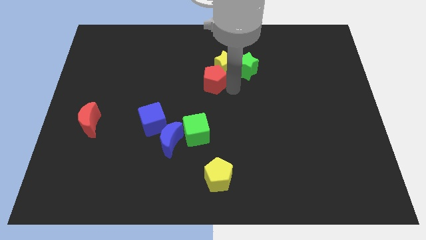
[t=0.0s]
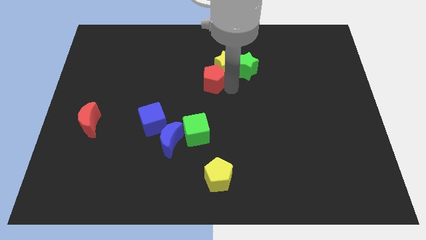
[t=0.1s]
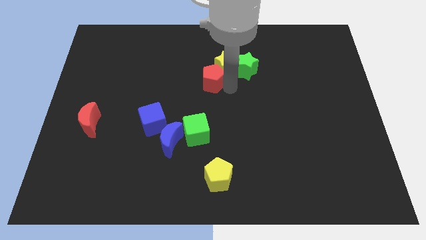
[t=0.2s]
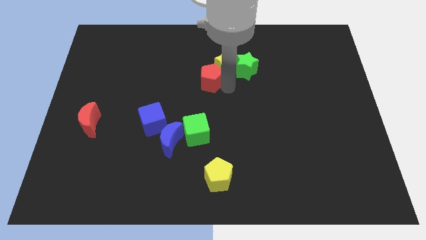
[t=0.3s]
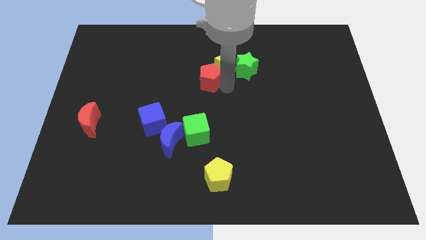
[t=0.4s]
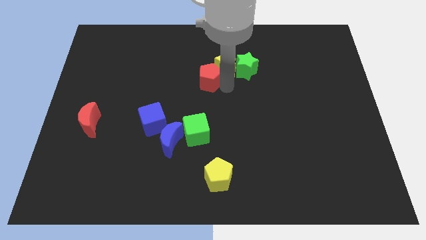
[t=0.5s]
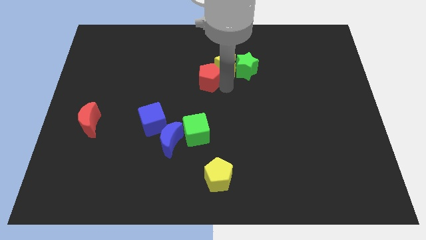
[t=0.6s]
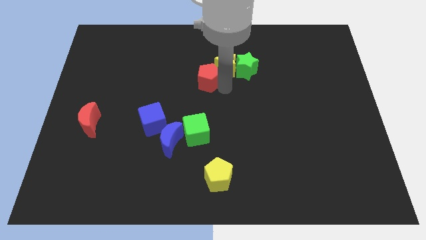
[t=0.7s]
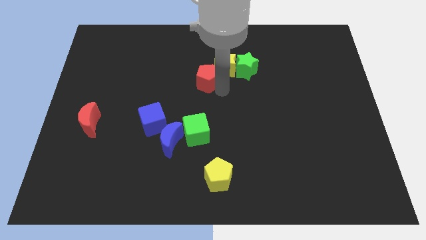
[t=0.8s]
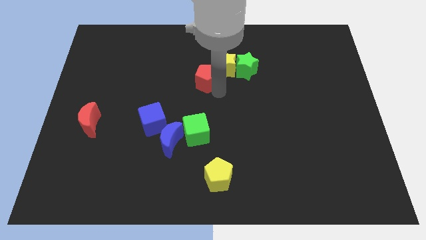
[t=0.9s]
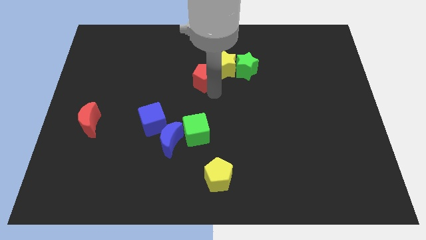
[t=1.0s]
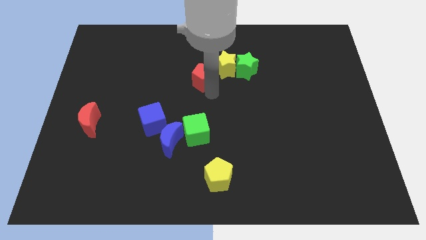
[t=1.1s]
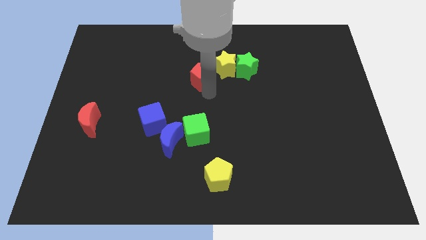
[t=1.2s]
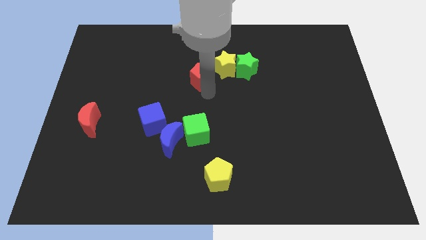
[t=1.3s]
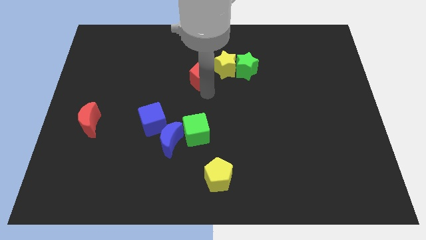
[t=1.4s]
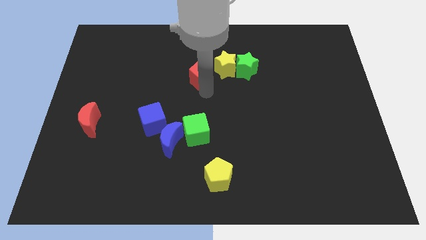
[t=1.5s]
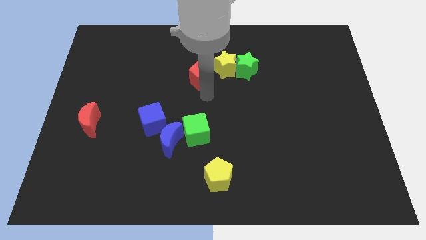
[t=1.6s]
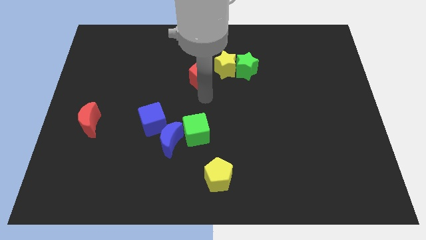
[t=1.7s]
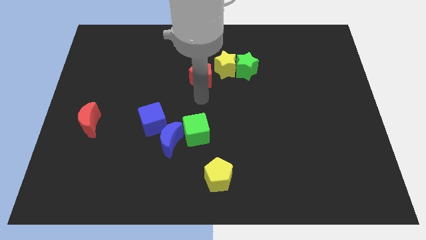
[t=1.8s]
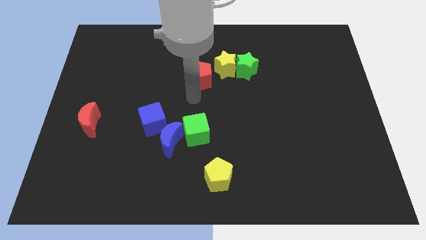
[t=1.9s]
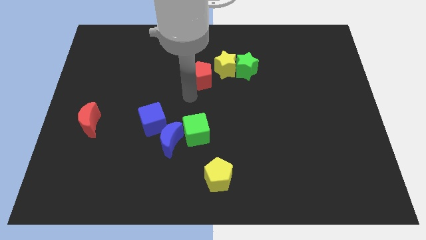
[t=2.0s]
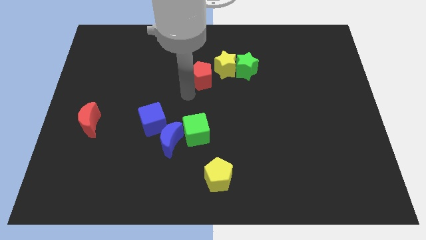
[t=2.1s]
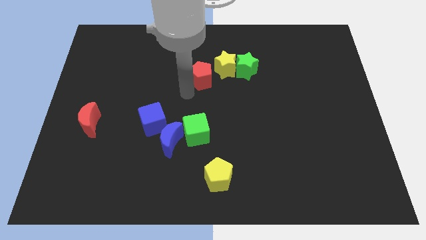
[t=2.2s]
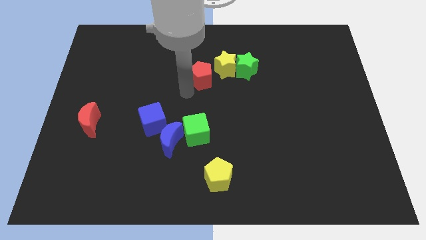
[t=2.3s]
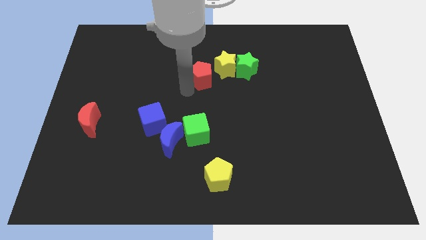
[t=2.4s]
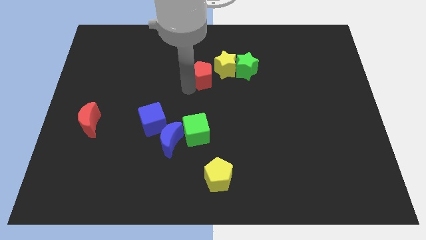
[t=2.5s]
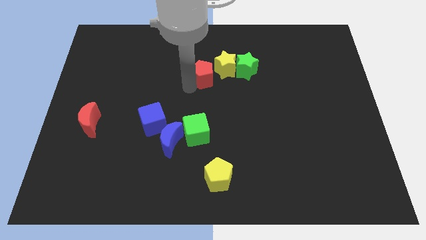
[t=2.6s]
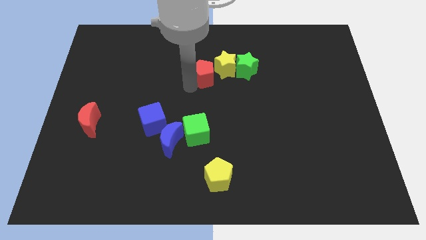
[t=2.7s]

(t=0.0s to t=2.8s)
place the red pentagon at the bottom left side of yellow star

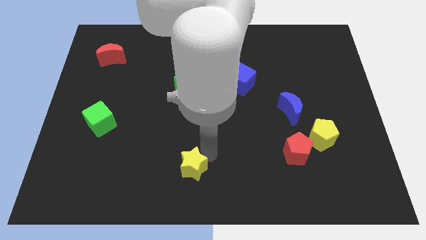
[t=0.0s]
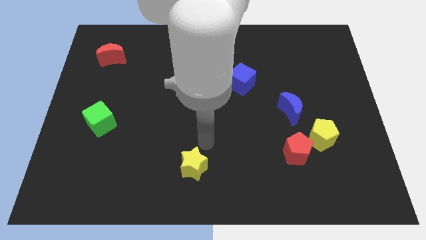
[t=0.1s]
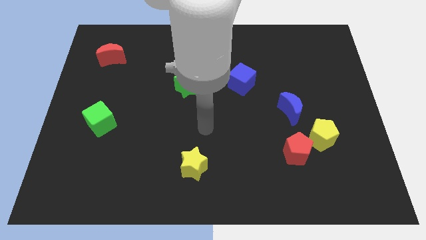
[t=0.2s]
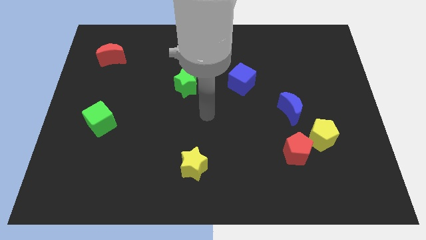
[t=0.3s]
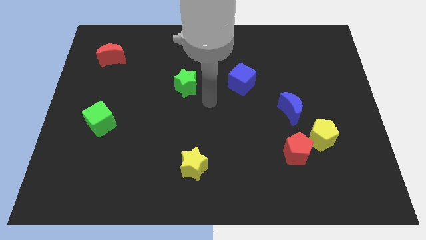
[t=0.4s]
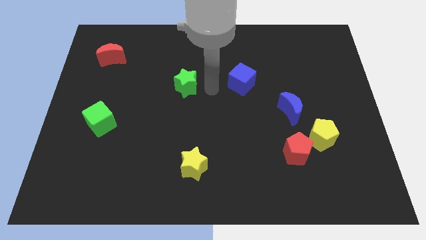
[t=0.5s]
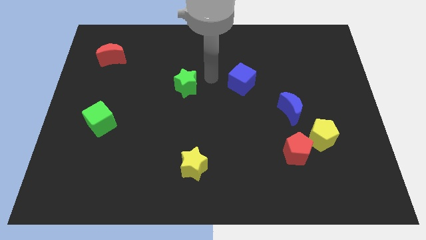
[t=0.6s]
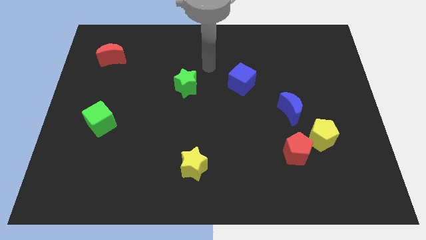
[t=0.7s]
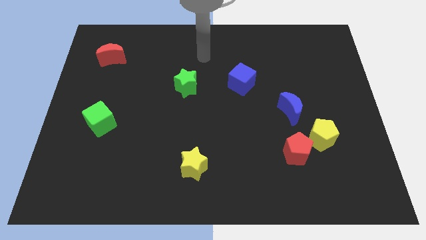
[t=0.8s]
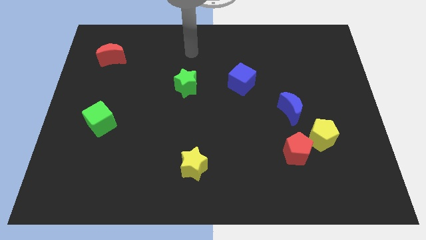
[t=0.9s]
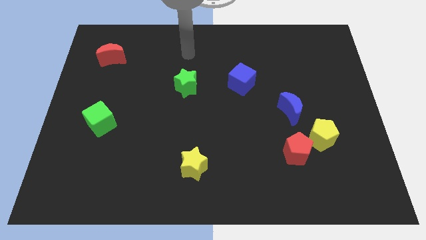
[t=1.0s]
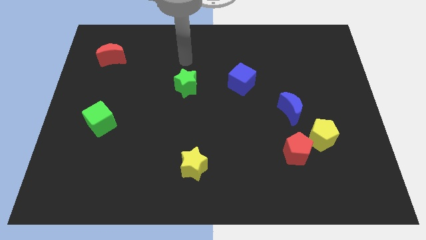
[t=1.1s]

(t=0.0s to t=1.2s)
move your arm to the top of green star

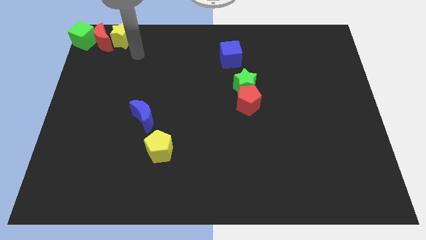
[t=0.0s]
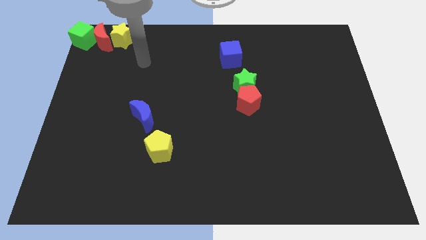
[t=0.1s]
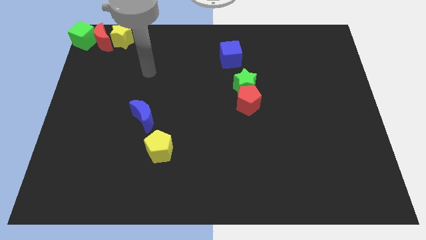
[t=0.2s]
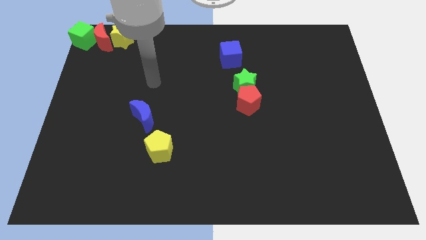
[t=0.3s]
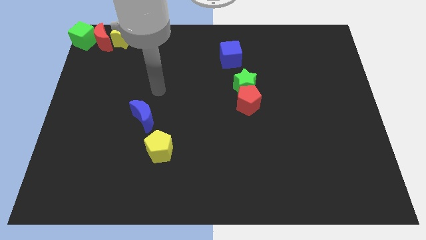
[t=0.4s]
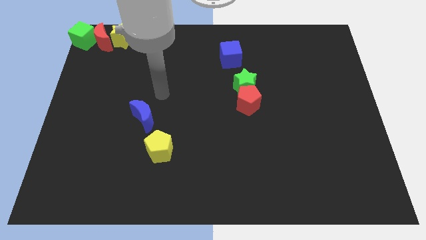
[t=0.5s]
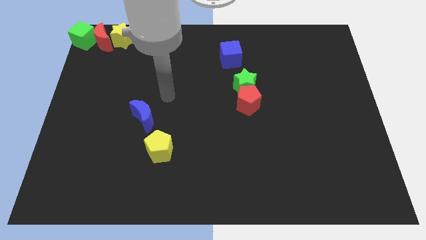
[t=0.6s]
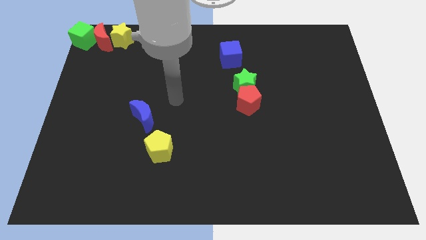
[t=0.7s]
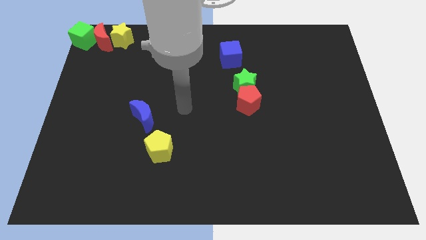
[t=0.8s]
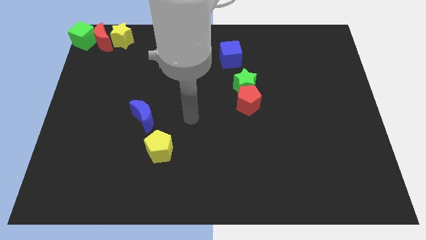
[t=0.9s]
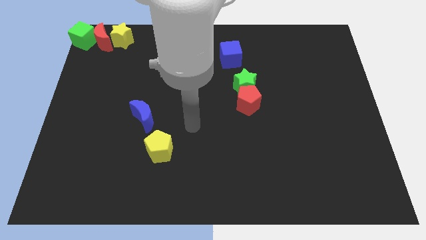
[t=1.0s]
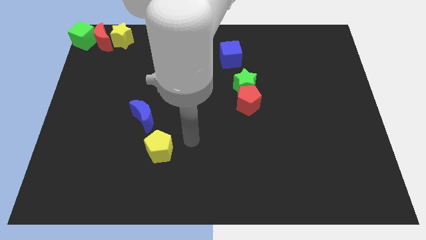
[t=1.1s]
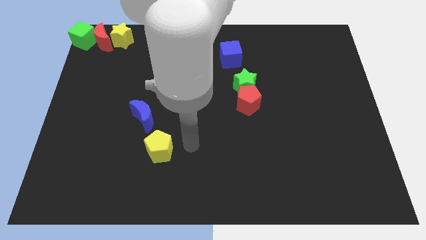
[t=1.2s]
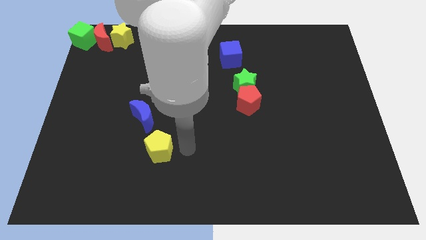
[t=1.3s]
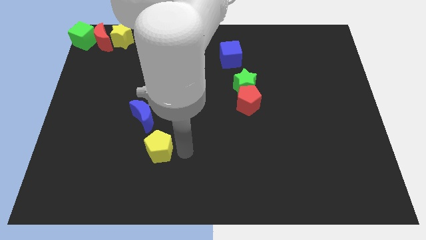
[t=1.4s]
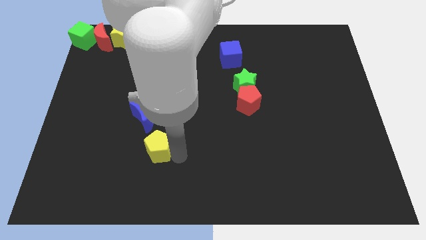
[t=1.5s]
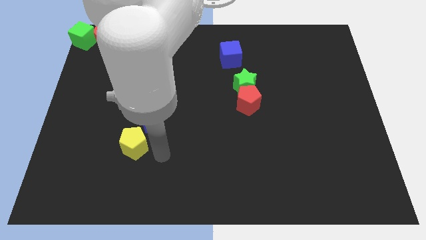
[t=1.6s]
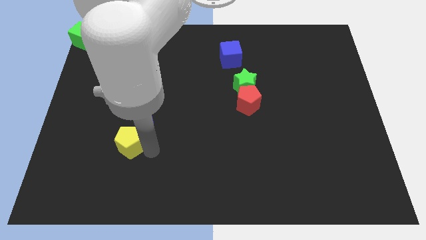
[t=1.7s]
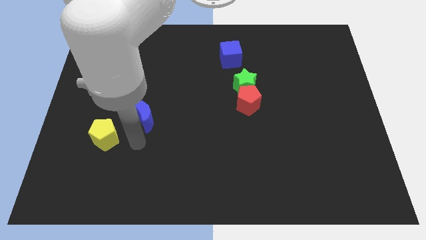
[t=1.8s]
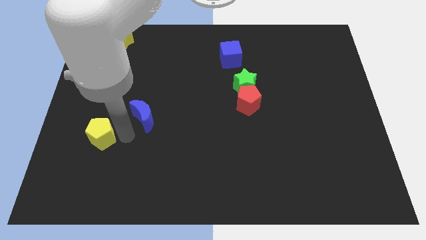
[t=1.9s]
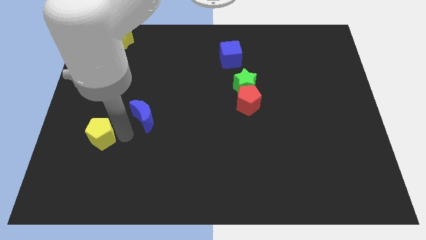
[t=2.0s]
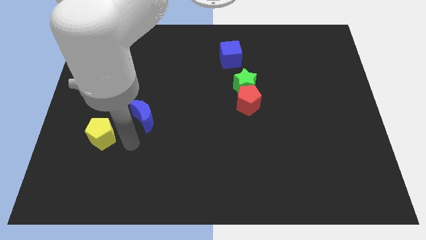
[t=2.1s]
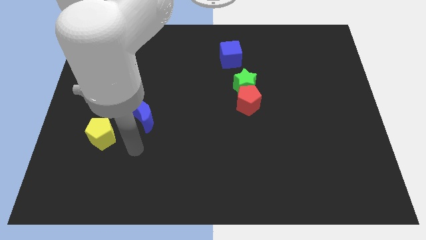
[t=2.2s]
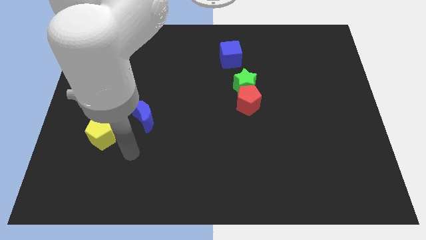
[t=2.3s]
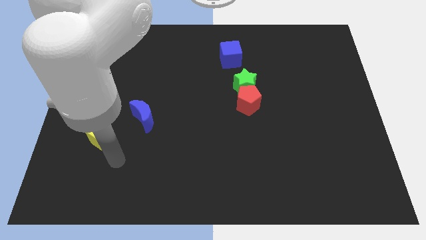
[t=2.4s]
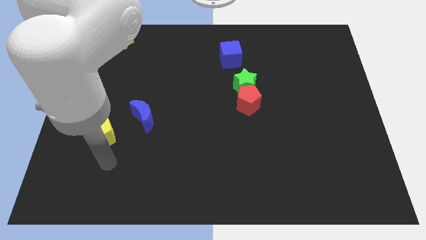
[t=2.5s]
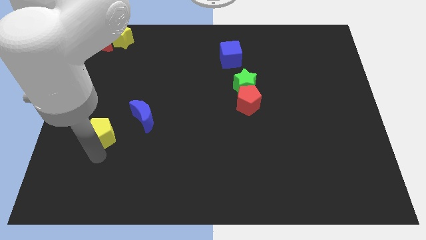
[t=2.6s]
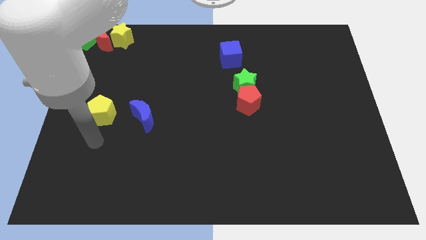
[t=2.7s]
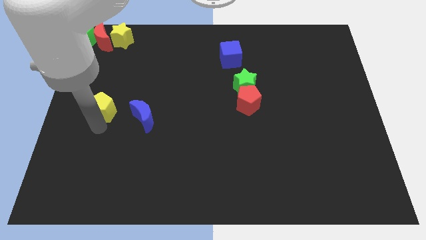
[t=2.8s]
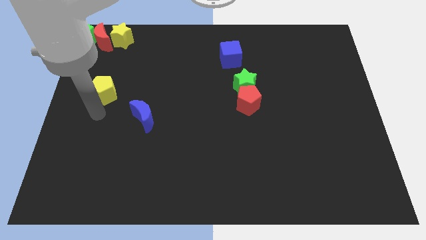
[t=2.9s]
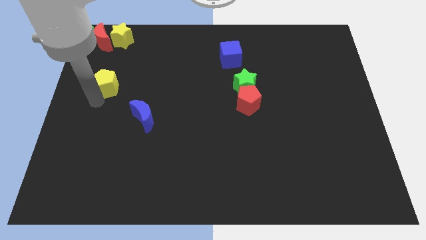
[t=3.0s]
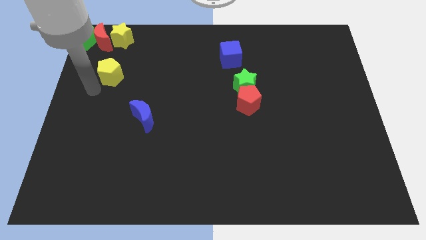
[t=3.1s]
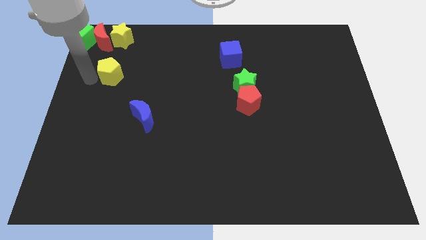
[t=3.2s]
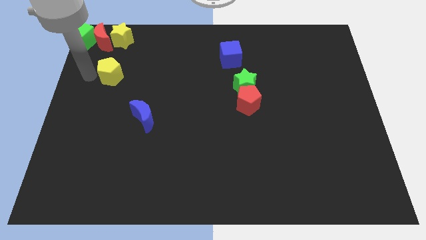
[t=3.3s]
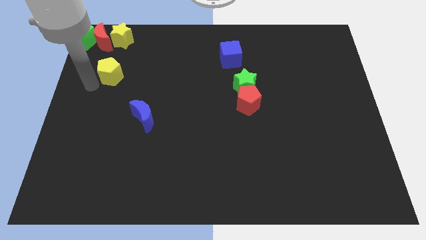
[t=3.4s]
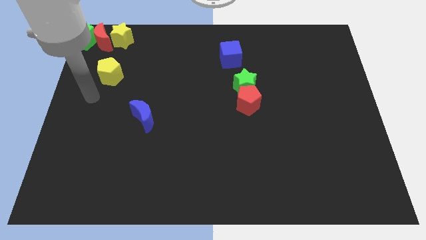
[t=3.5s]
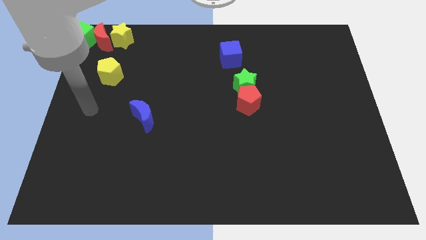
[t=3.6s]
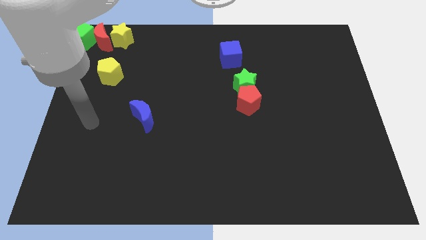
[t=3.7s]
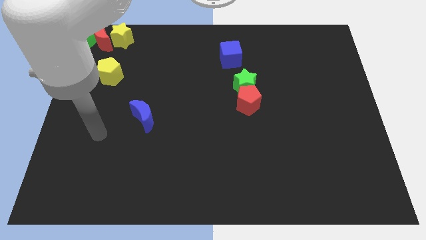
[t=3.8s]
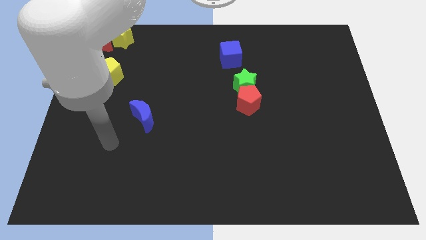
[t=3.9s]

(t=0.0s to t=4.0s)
place the yellow pentagon below the red crescent
